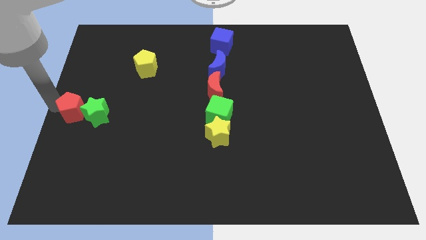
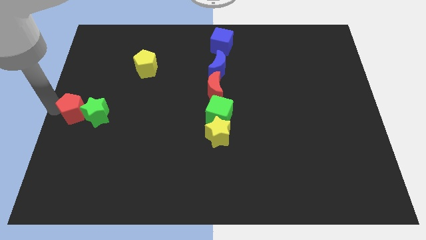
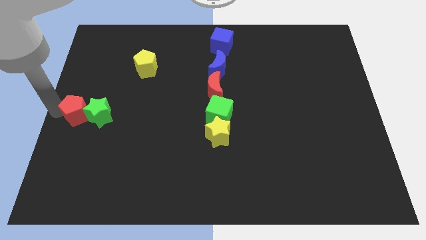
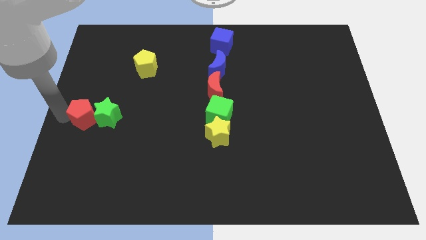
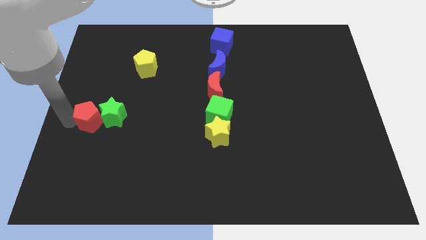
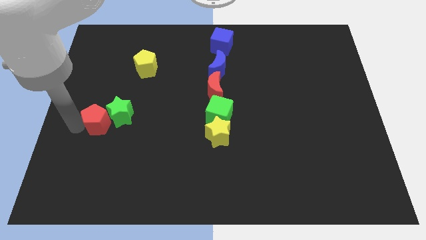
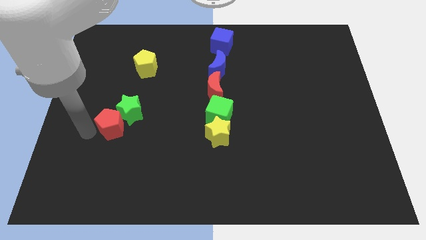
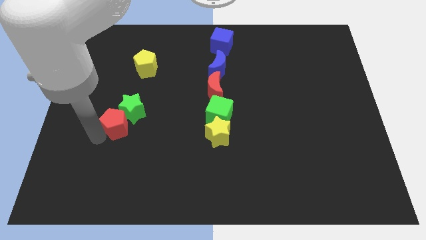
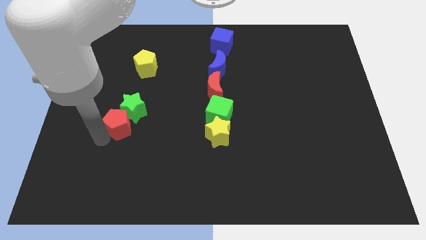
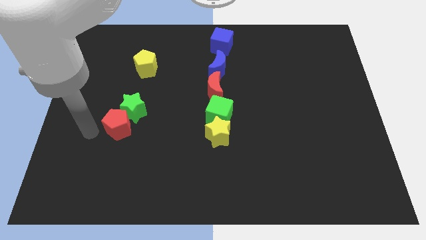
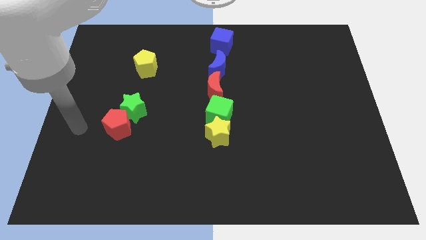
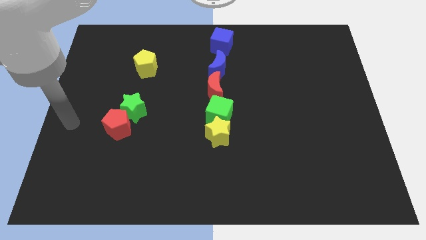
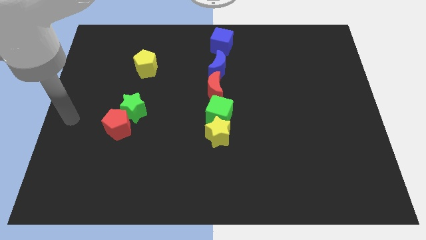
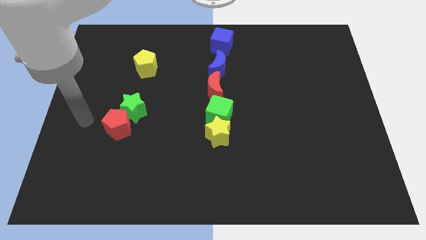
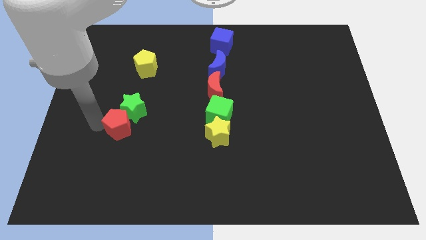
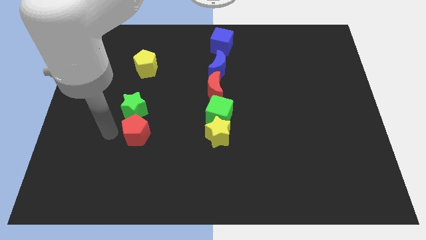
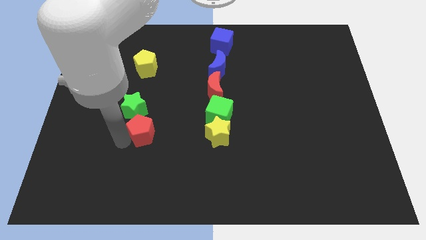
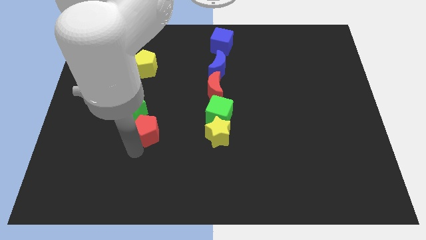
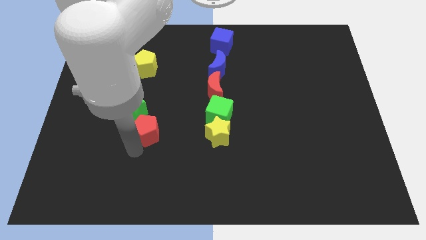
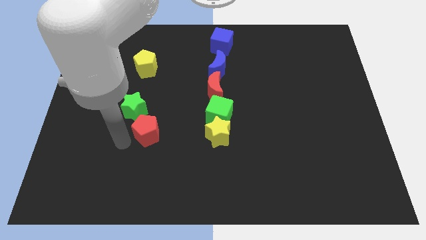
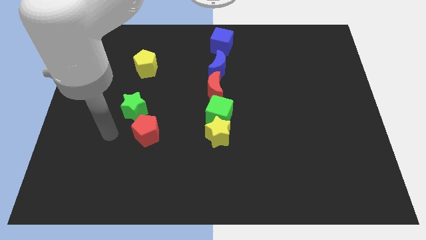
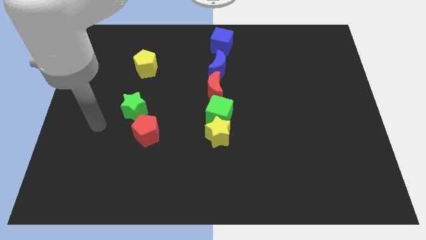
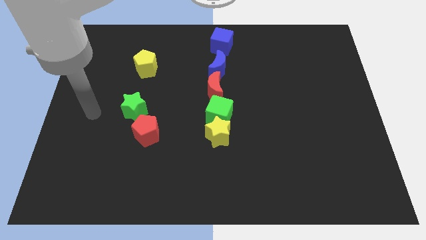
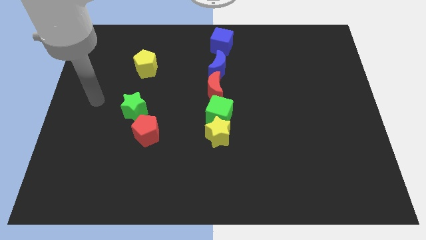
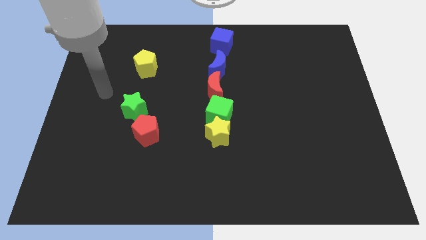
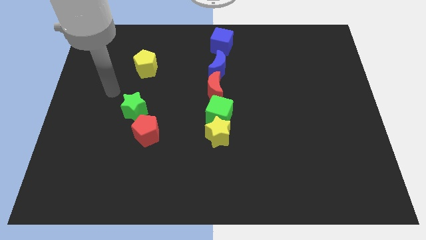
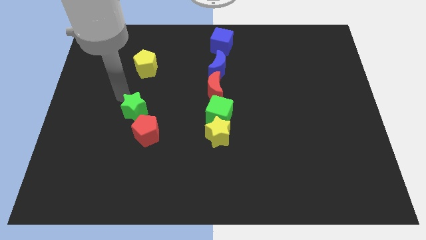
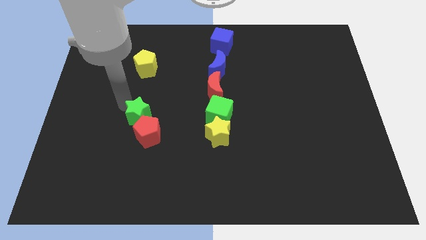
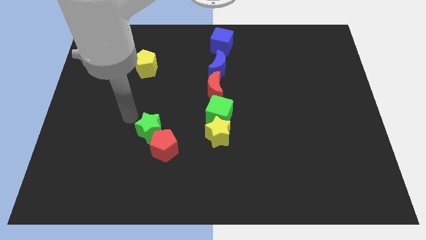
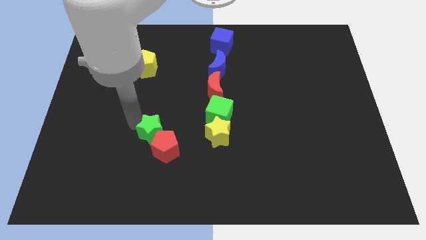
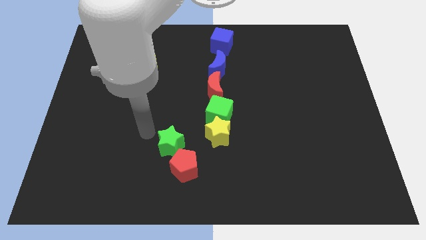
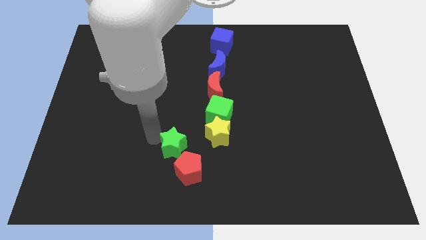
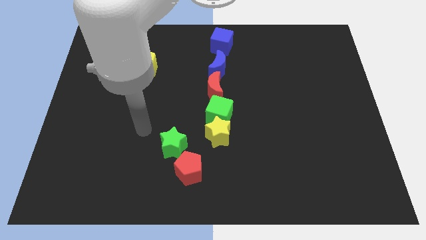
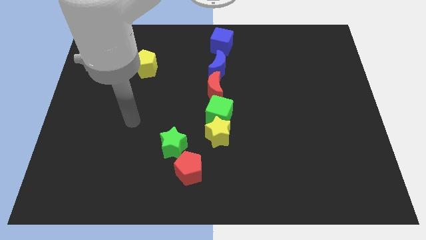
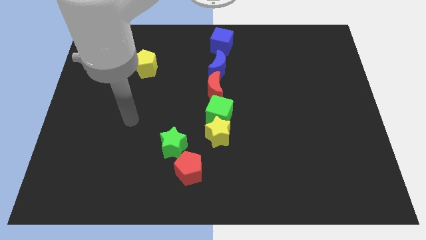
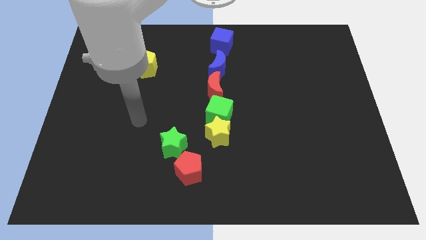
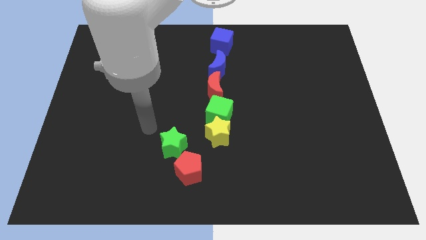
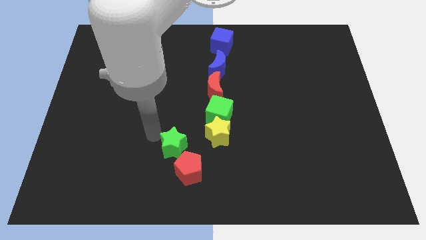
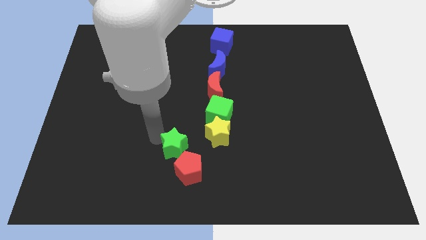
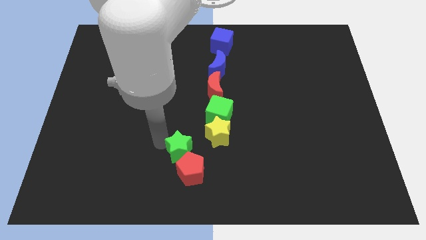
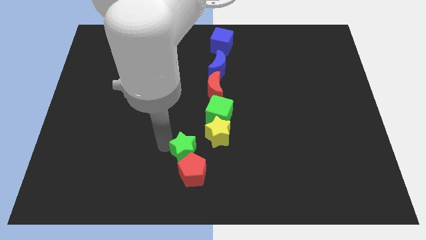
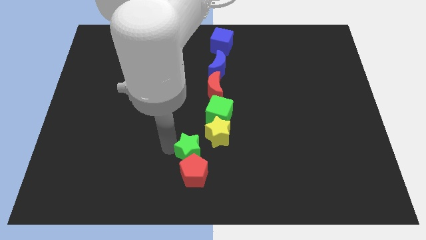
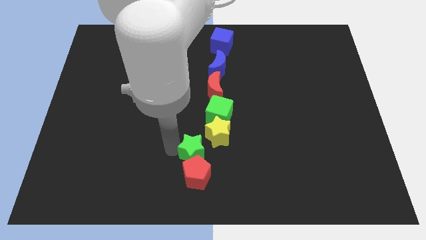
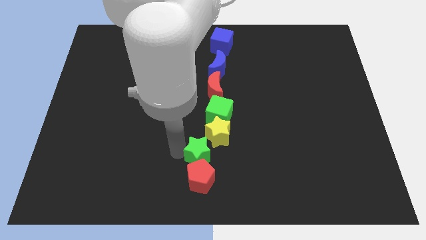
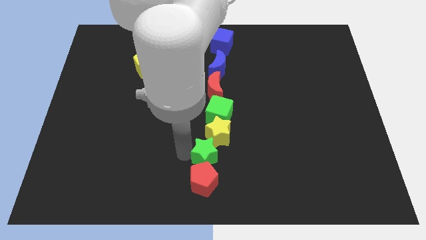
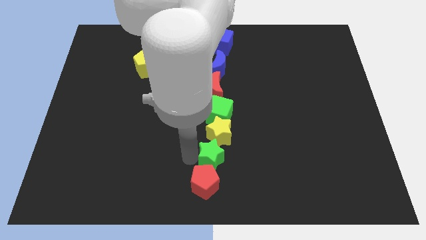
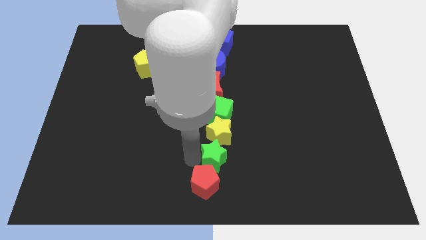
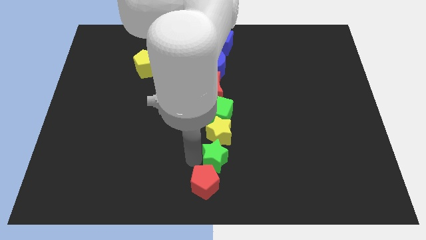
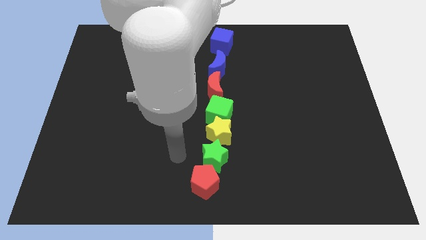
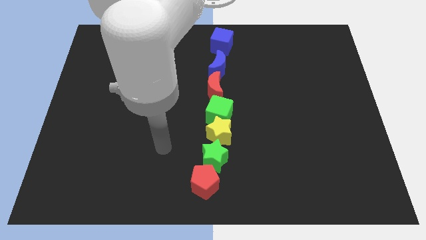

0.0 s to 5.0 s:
place the green star and the red pentagon below the yellow star

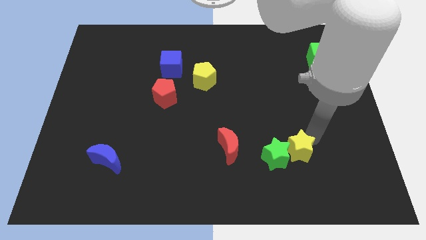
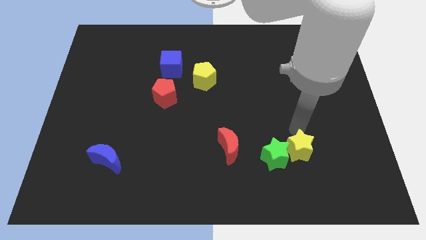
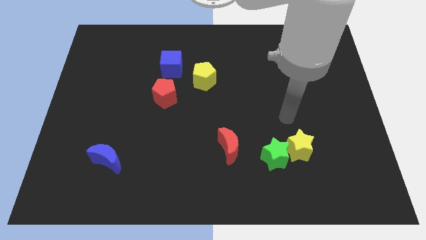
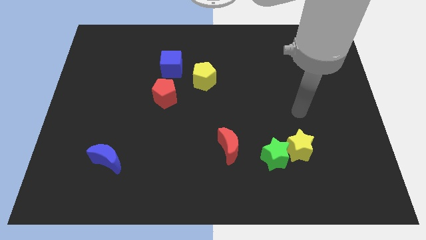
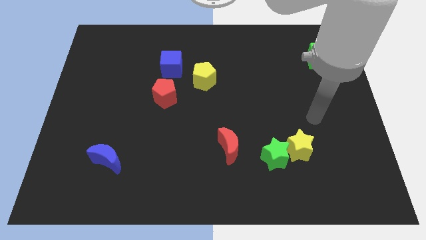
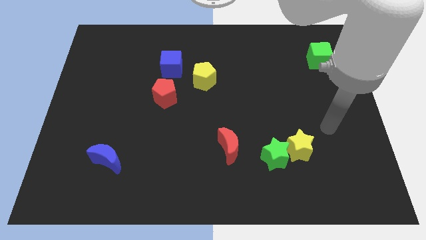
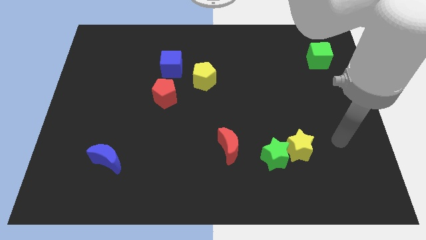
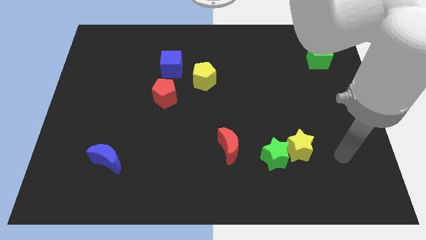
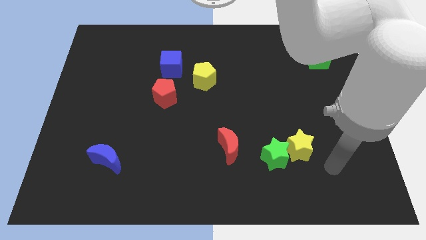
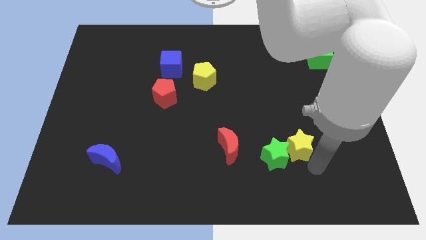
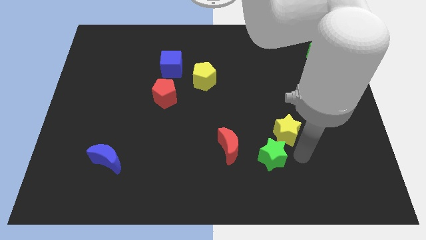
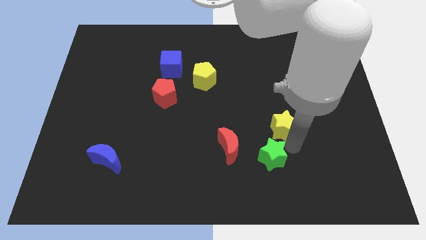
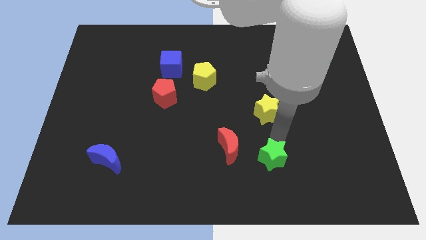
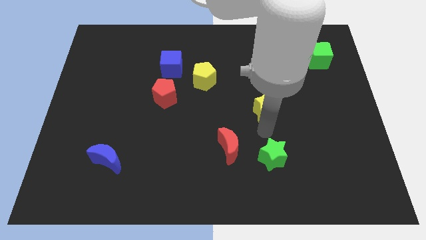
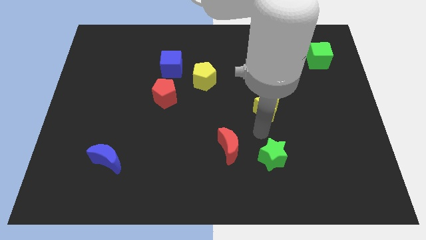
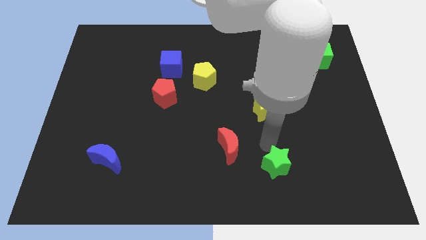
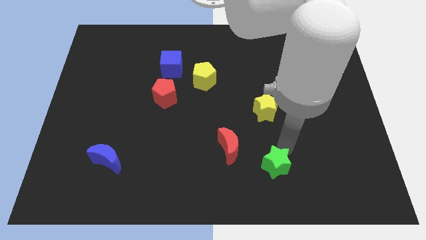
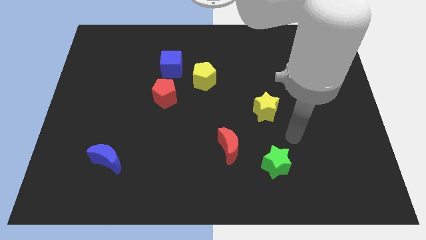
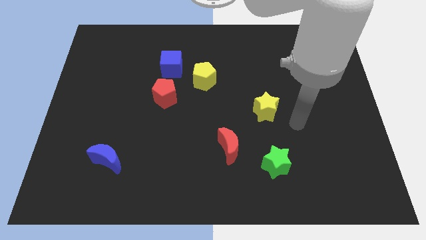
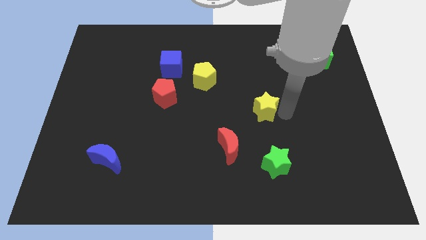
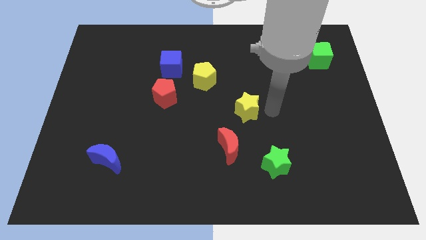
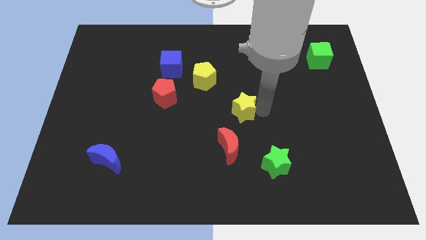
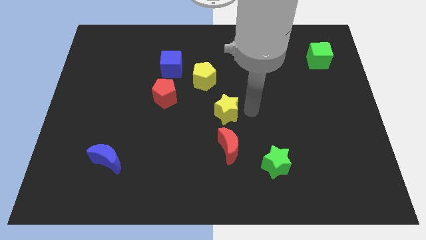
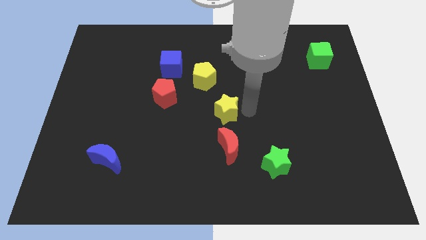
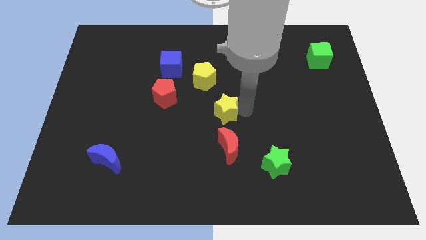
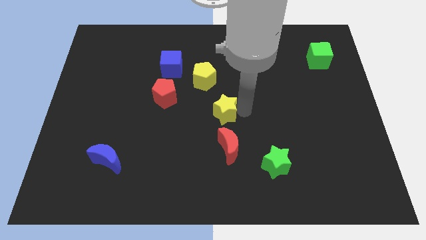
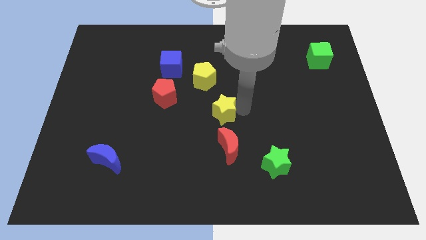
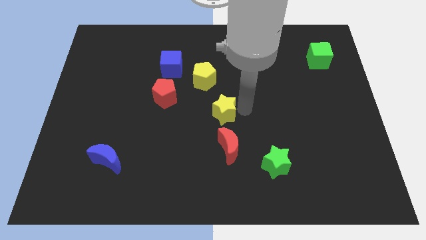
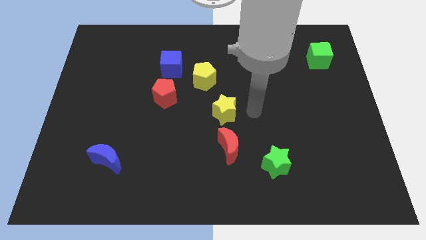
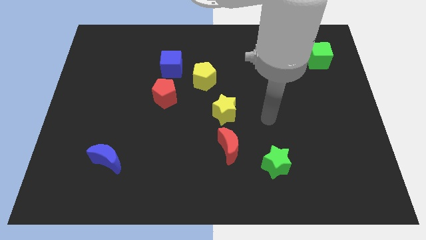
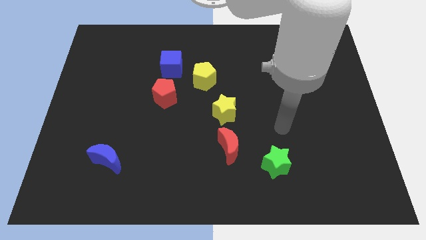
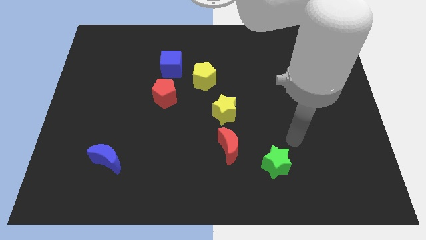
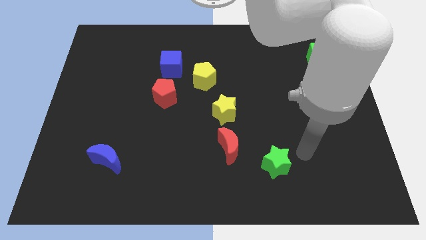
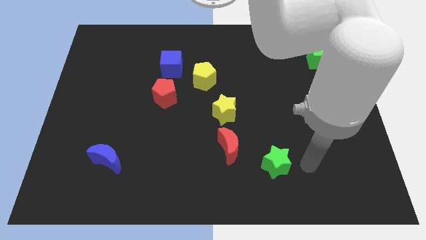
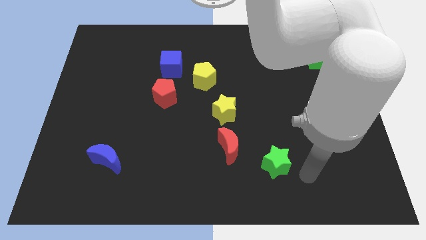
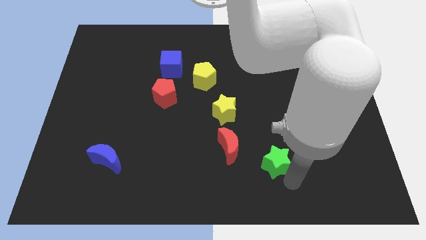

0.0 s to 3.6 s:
move the yellow star above the red moon

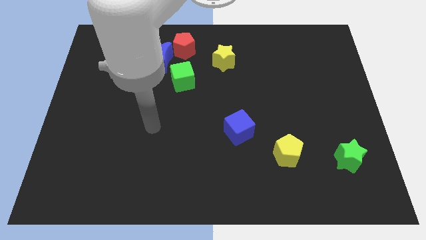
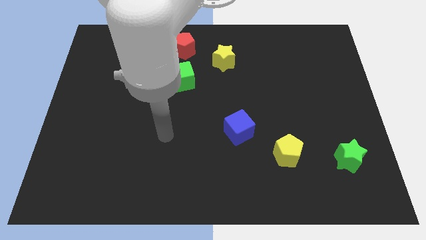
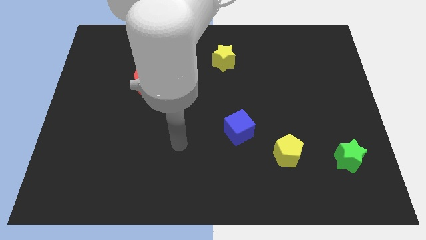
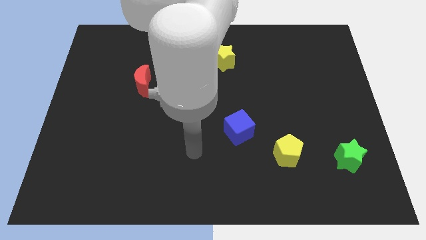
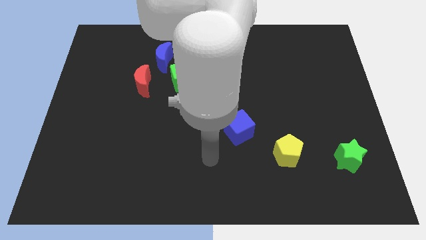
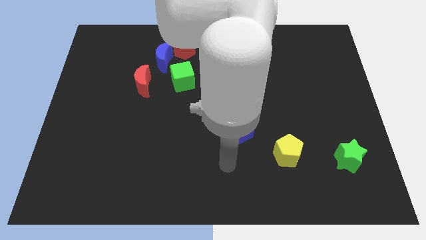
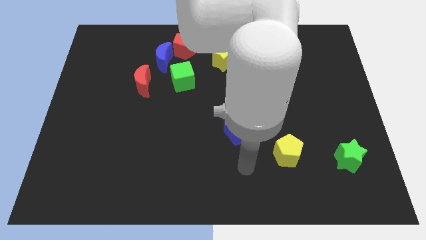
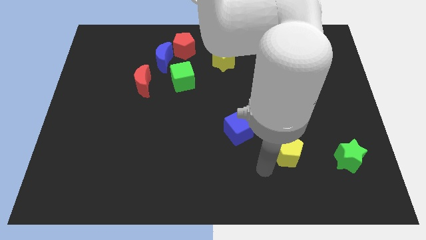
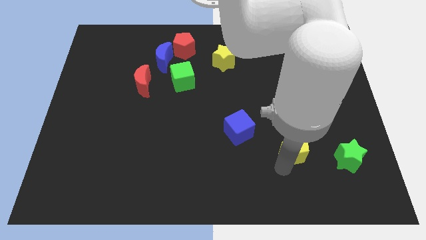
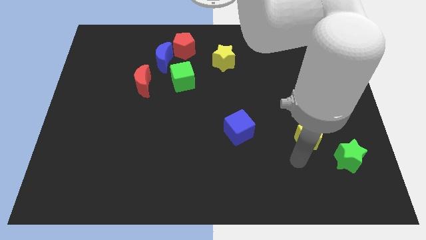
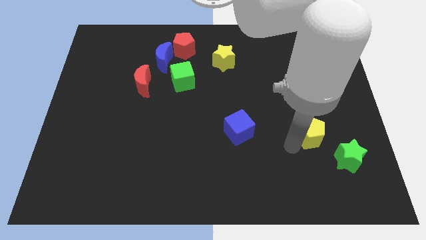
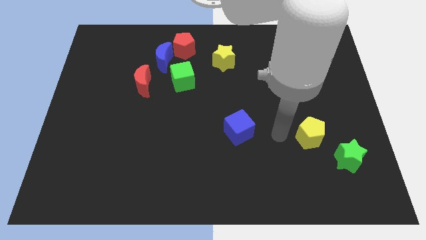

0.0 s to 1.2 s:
push the yellow pentagon to the right of the blue cube
